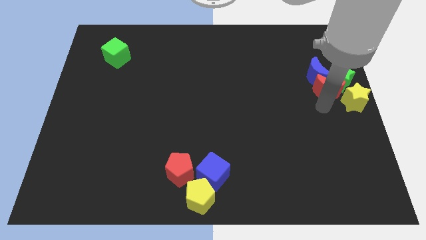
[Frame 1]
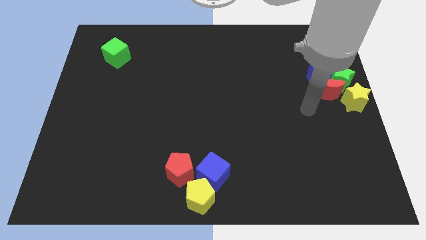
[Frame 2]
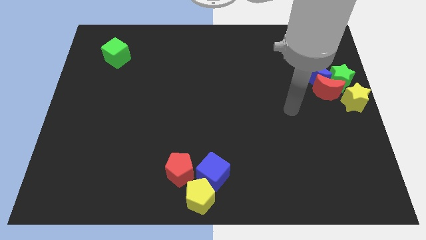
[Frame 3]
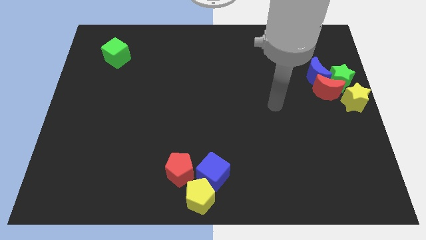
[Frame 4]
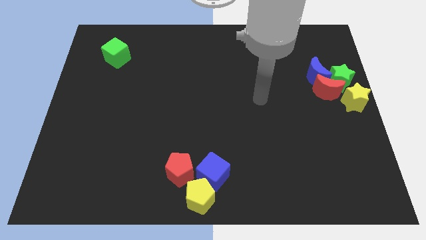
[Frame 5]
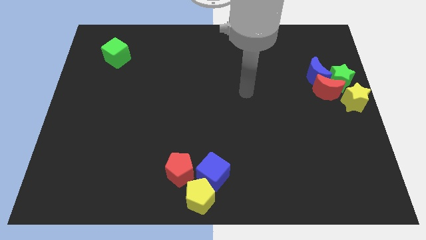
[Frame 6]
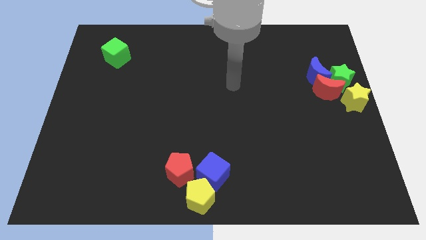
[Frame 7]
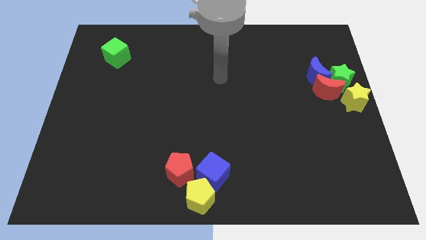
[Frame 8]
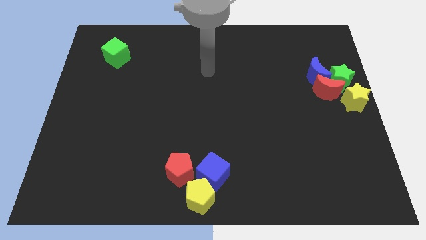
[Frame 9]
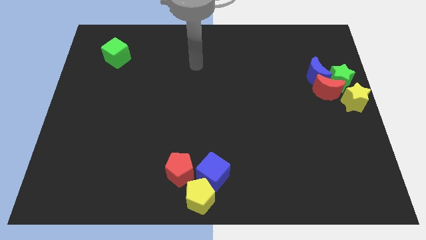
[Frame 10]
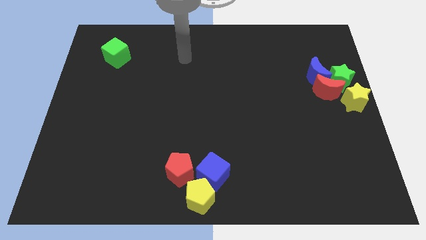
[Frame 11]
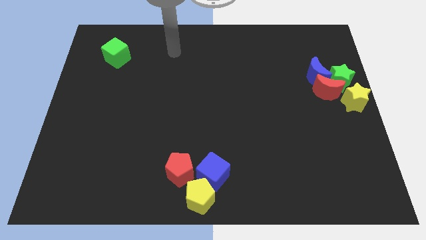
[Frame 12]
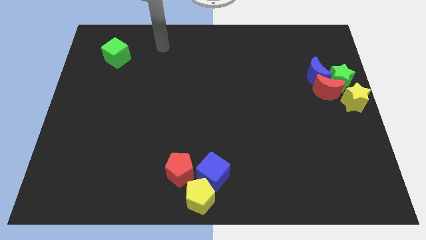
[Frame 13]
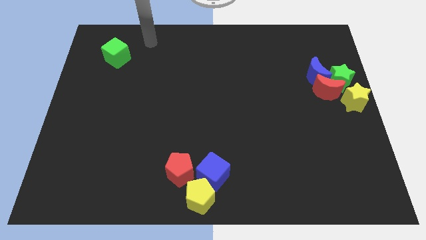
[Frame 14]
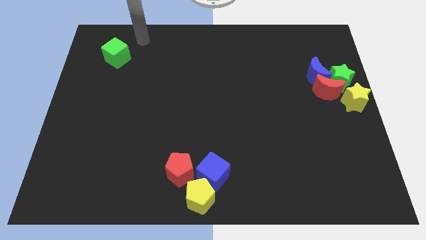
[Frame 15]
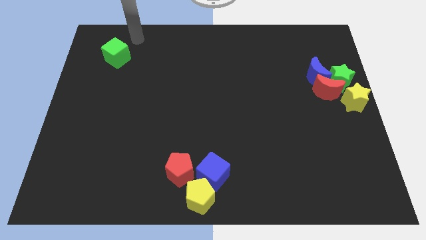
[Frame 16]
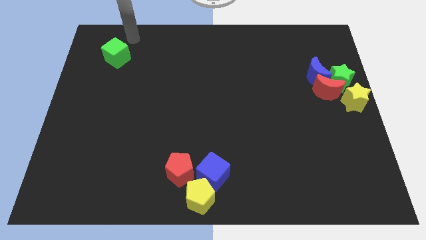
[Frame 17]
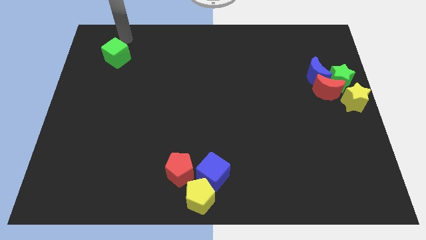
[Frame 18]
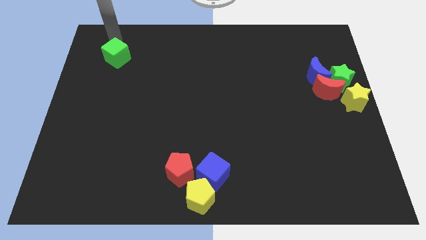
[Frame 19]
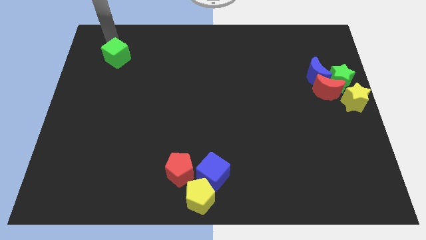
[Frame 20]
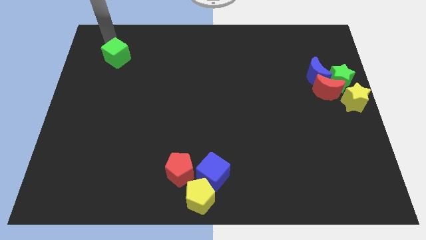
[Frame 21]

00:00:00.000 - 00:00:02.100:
point your arm above green cube

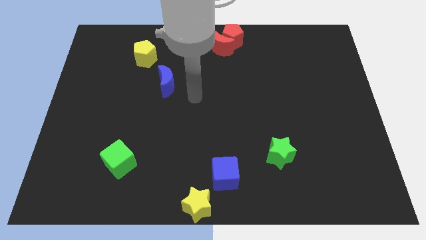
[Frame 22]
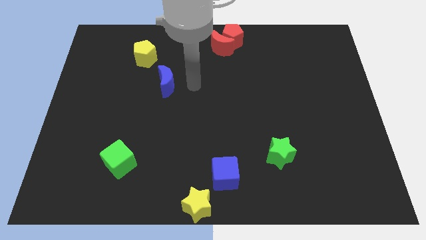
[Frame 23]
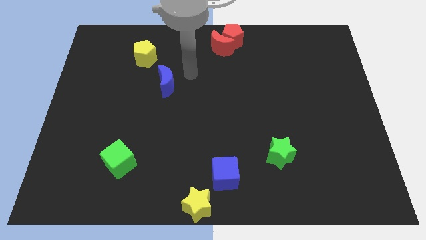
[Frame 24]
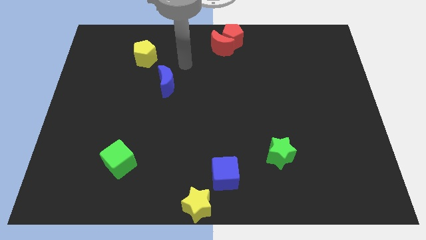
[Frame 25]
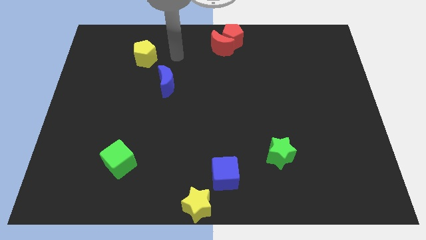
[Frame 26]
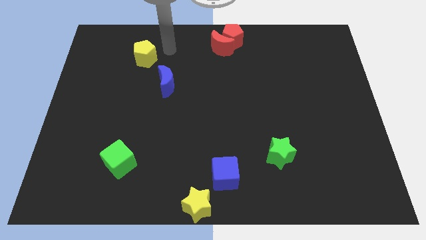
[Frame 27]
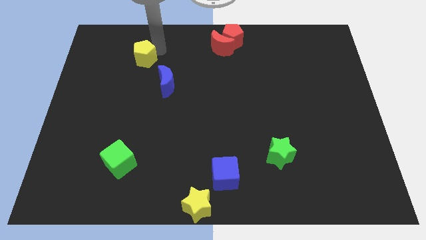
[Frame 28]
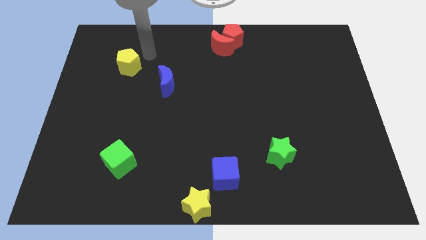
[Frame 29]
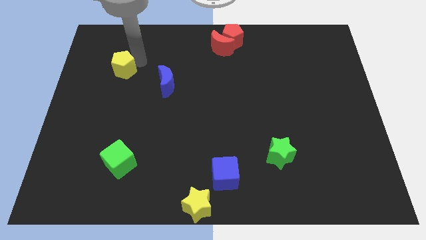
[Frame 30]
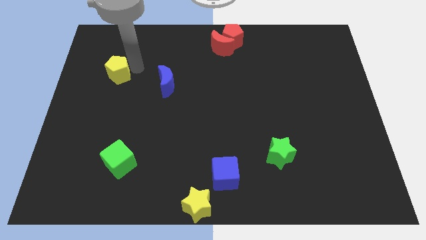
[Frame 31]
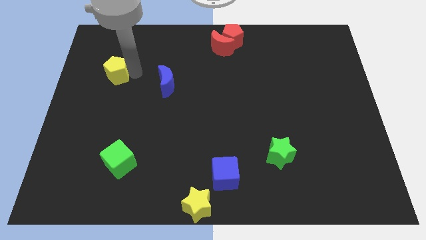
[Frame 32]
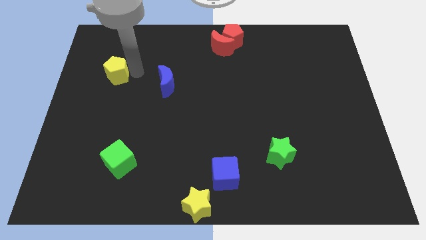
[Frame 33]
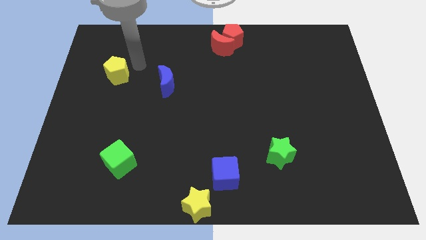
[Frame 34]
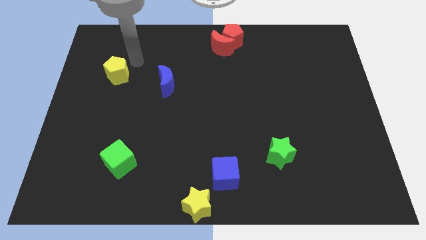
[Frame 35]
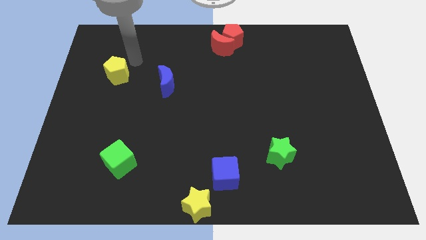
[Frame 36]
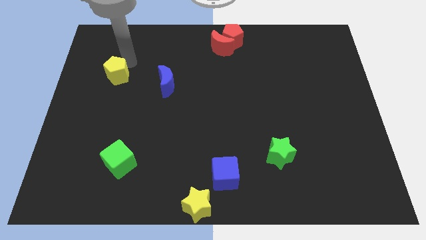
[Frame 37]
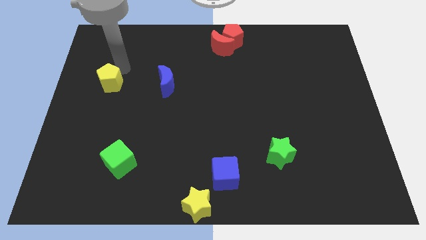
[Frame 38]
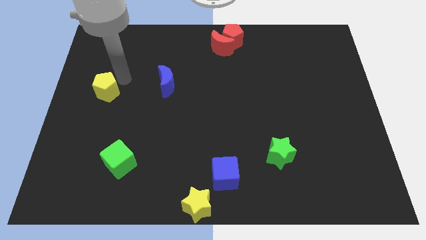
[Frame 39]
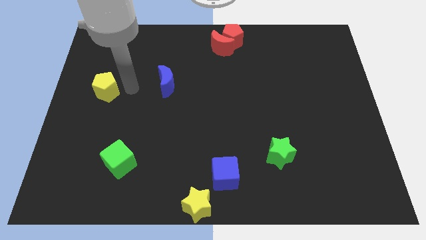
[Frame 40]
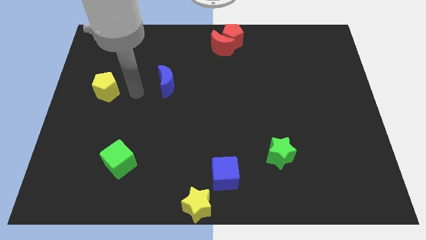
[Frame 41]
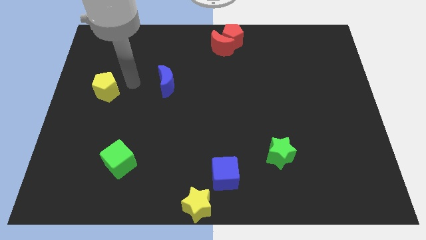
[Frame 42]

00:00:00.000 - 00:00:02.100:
place the yellow pentagon to the left side of the blue crescent

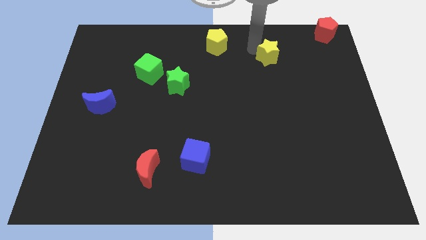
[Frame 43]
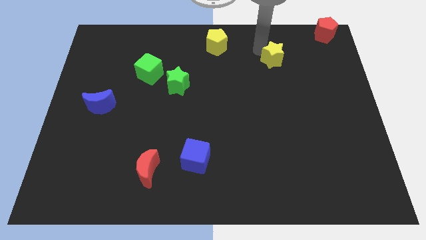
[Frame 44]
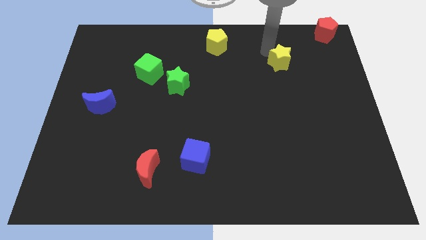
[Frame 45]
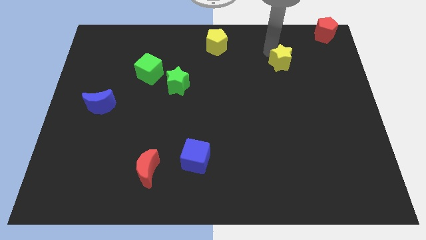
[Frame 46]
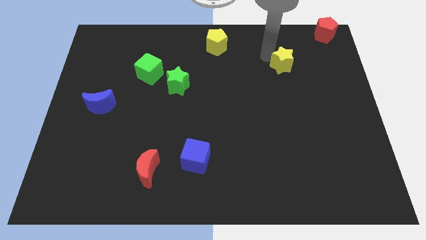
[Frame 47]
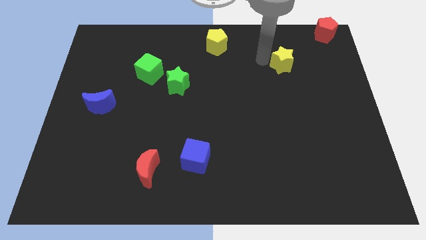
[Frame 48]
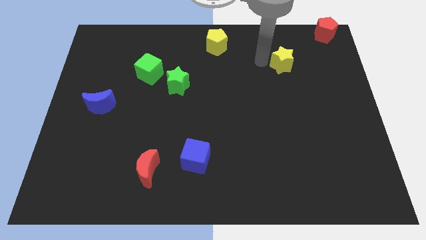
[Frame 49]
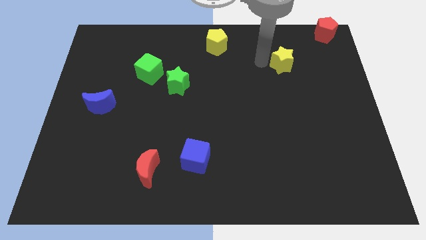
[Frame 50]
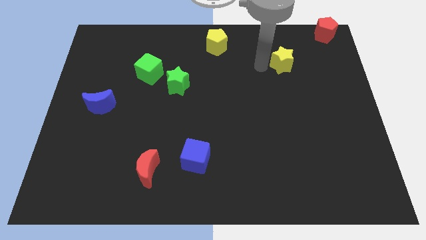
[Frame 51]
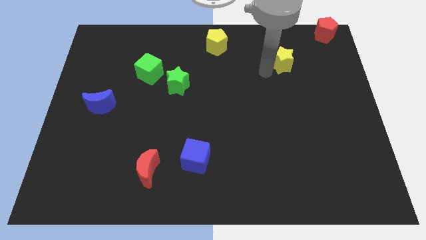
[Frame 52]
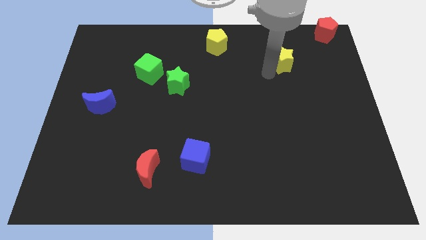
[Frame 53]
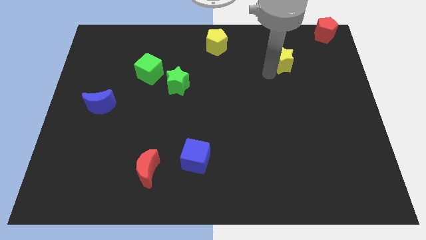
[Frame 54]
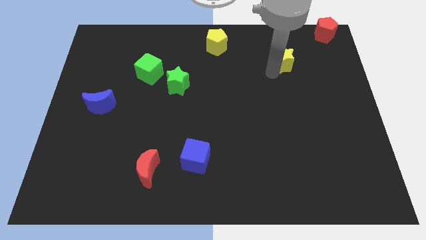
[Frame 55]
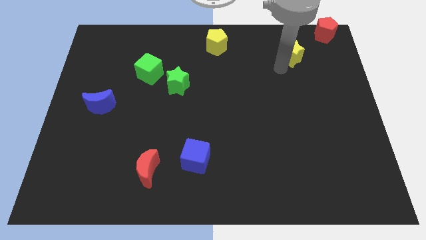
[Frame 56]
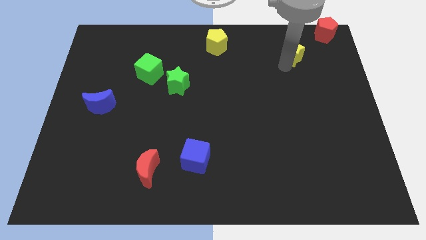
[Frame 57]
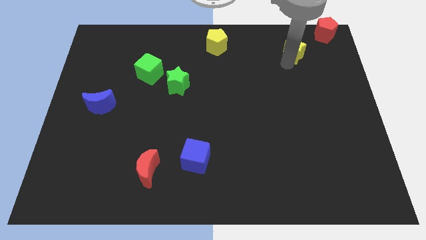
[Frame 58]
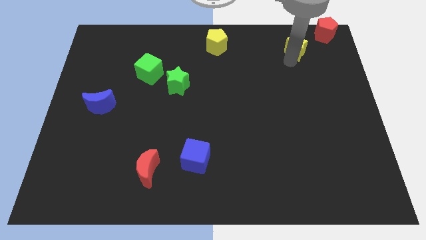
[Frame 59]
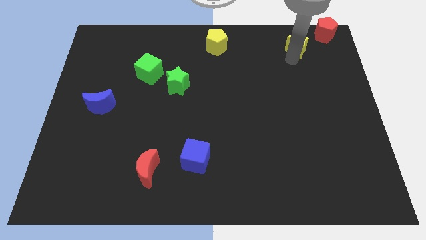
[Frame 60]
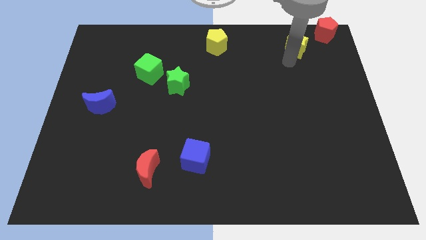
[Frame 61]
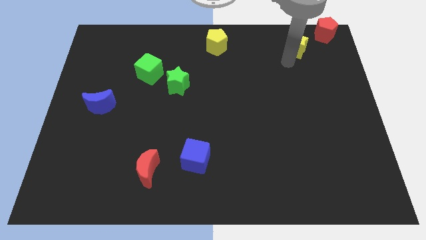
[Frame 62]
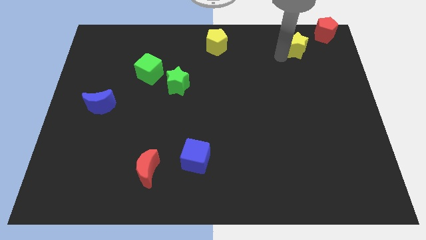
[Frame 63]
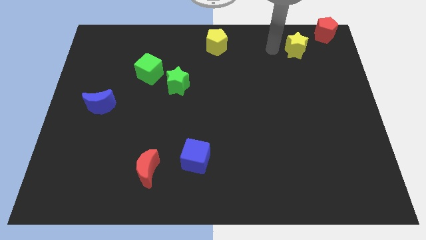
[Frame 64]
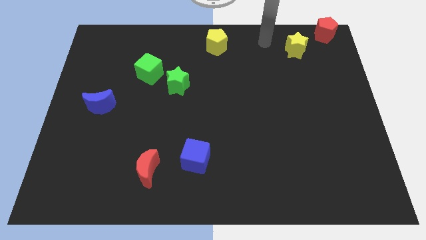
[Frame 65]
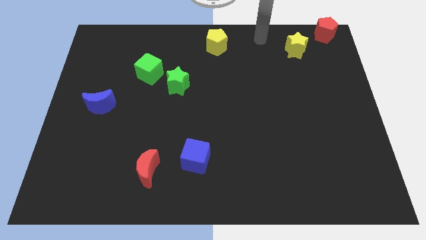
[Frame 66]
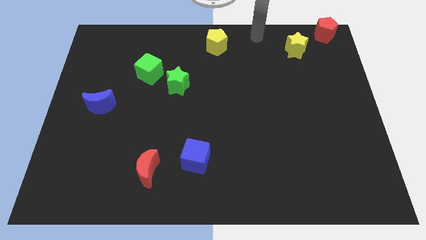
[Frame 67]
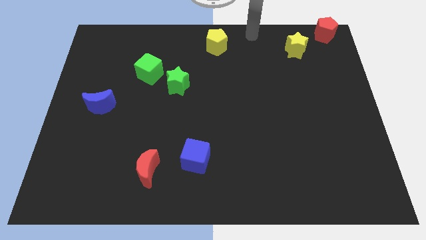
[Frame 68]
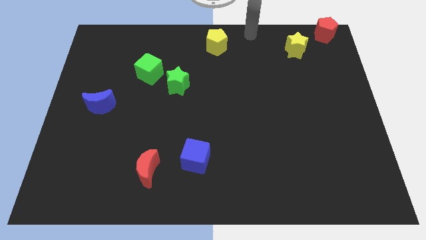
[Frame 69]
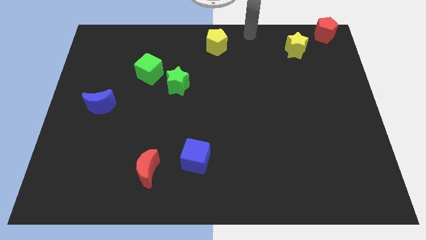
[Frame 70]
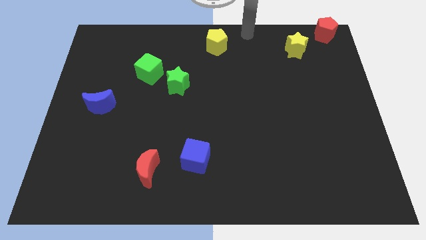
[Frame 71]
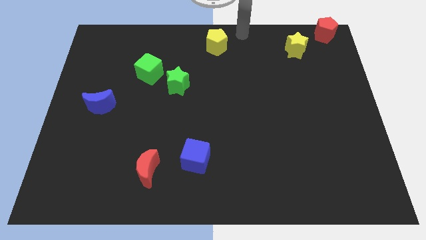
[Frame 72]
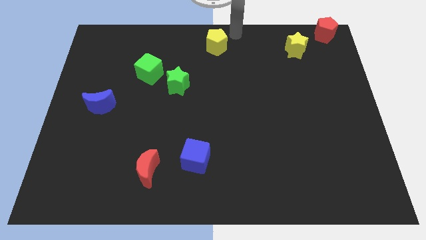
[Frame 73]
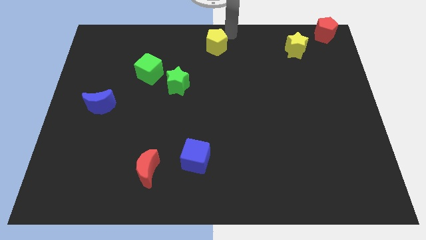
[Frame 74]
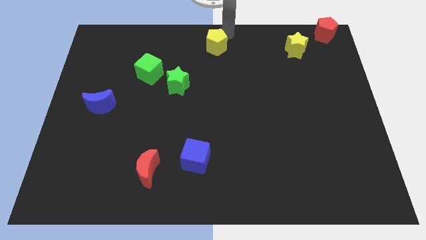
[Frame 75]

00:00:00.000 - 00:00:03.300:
push the yellow star diagonally on the bottom left side of the red pentagon

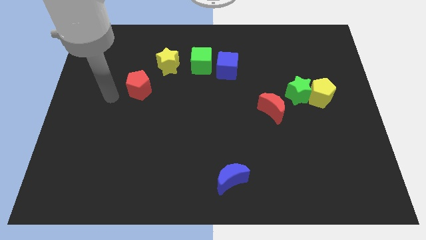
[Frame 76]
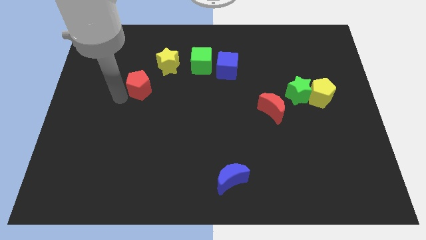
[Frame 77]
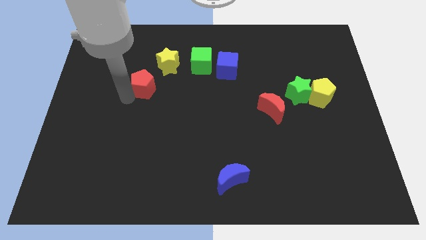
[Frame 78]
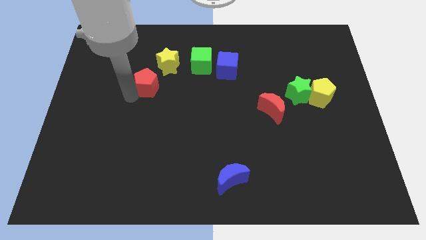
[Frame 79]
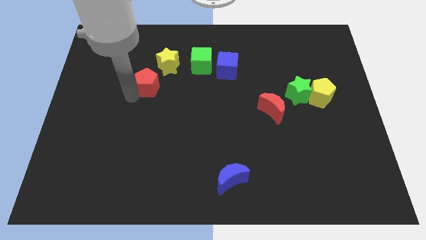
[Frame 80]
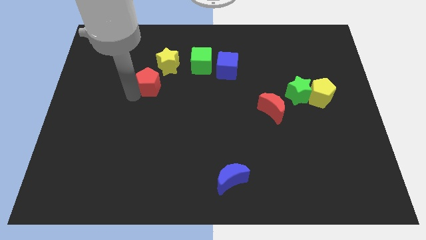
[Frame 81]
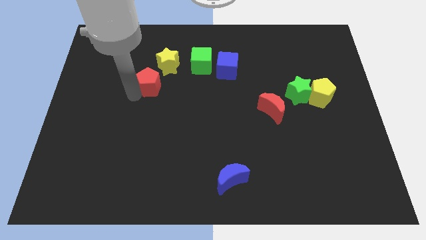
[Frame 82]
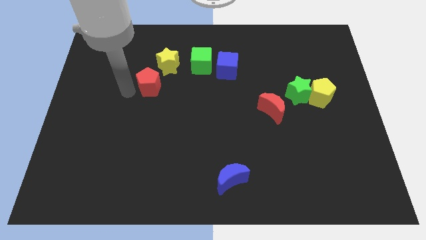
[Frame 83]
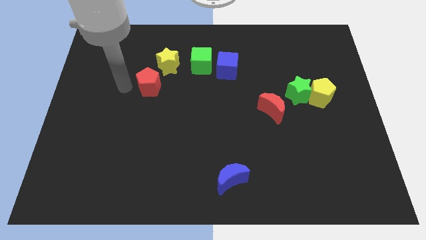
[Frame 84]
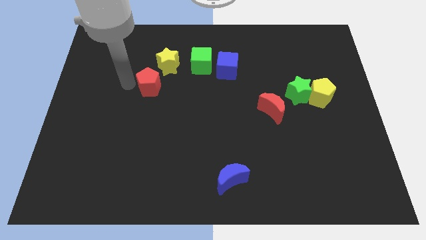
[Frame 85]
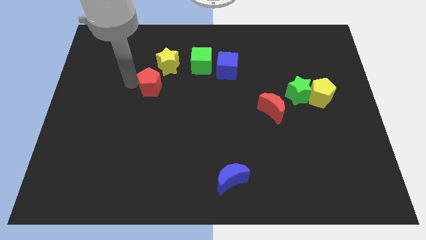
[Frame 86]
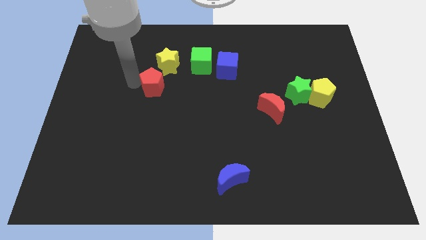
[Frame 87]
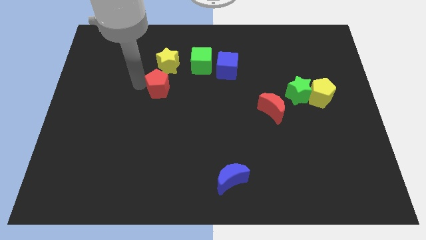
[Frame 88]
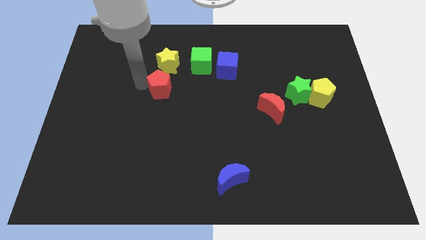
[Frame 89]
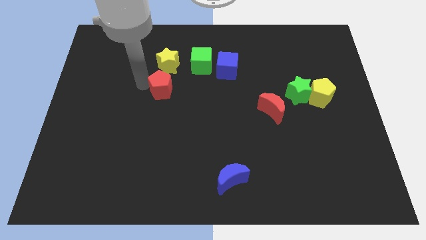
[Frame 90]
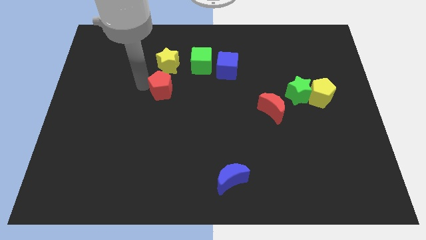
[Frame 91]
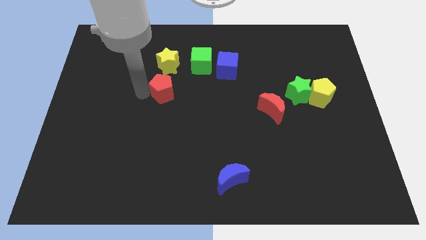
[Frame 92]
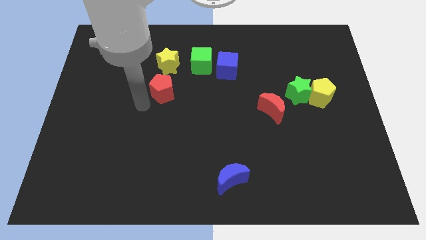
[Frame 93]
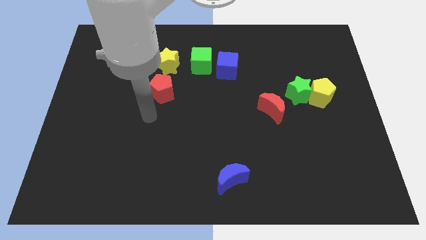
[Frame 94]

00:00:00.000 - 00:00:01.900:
push the red block towards the bottom side of the yellow star
